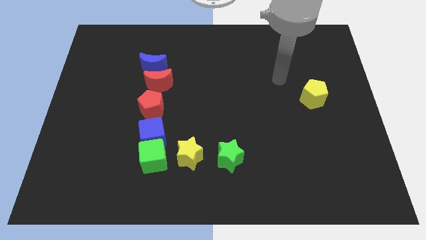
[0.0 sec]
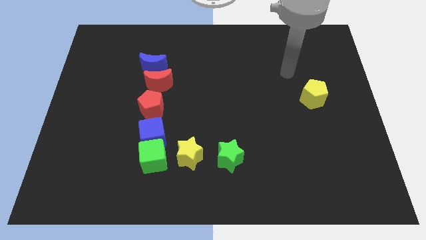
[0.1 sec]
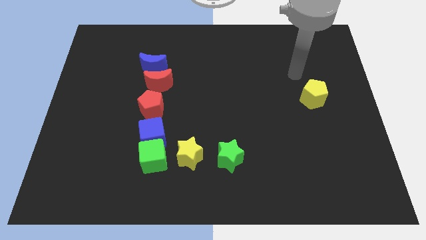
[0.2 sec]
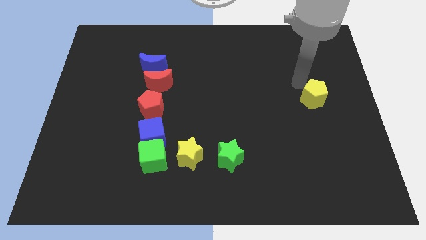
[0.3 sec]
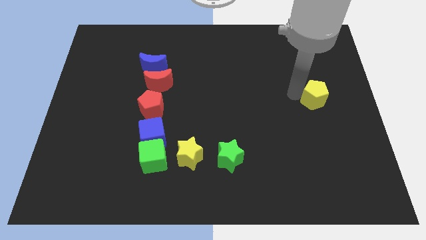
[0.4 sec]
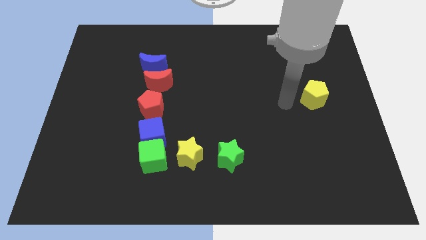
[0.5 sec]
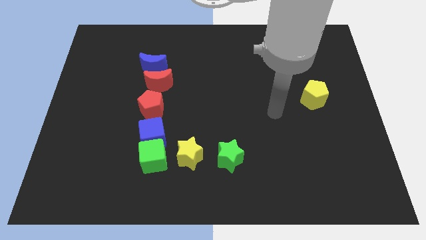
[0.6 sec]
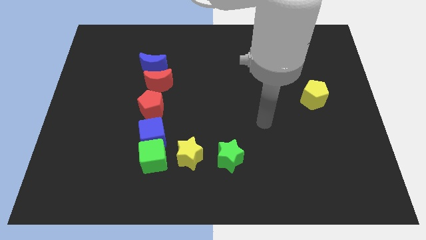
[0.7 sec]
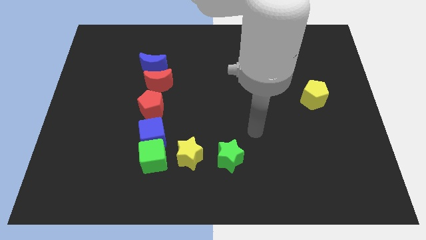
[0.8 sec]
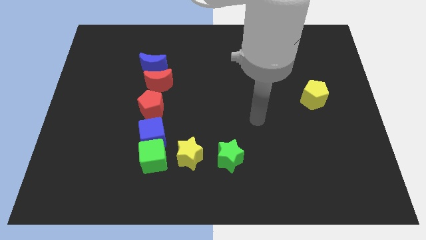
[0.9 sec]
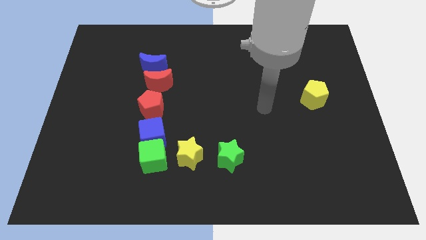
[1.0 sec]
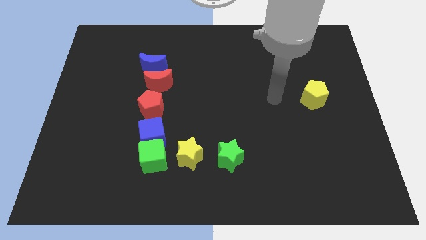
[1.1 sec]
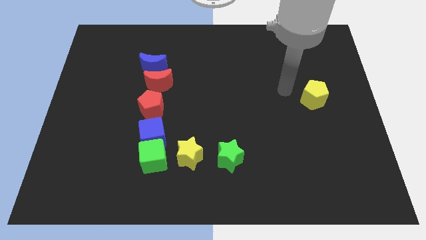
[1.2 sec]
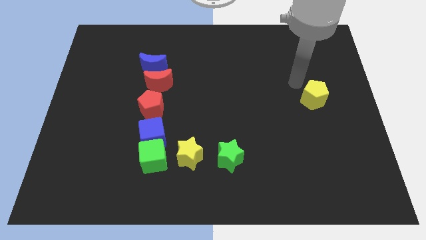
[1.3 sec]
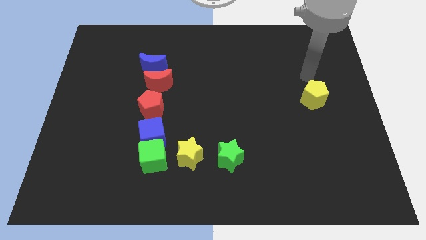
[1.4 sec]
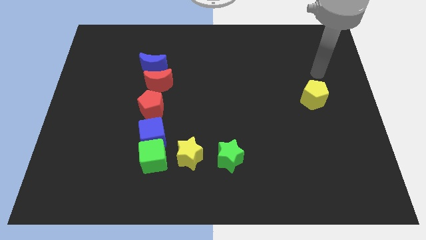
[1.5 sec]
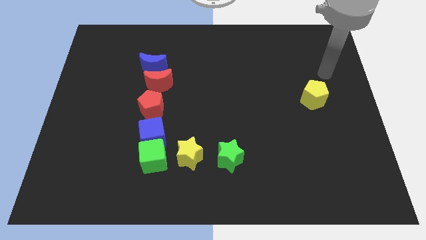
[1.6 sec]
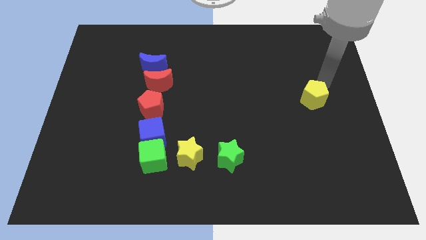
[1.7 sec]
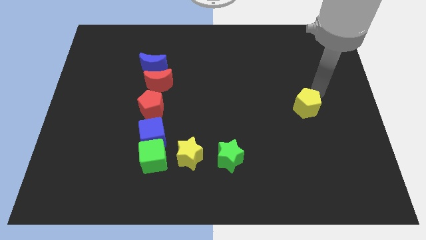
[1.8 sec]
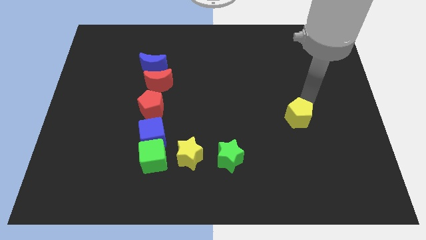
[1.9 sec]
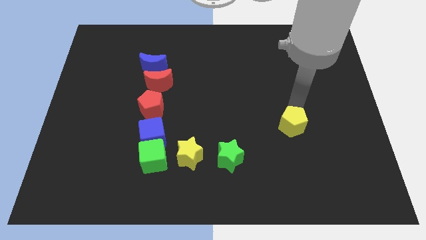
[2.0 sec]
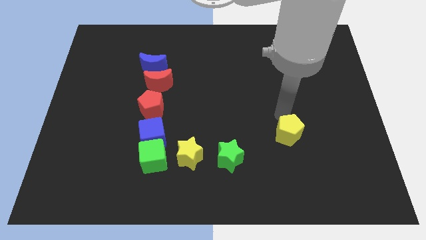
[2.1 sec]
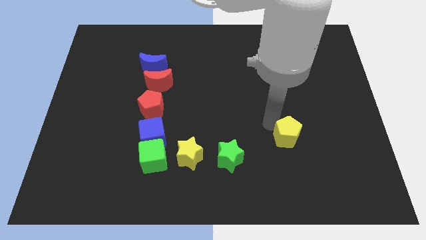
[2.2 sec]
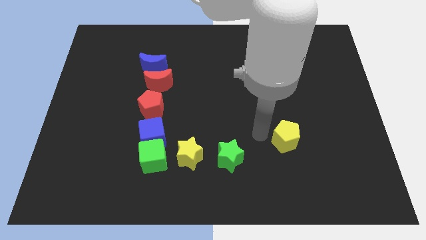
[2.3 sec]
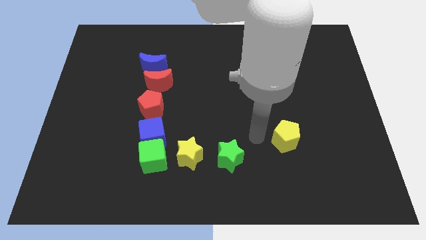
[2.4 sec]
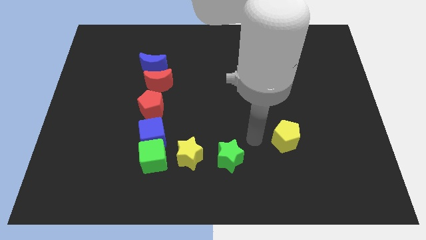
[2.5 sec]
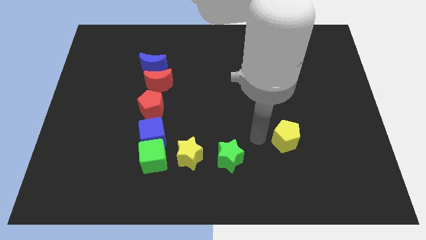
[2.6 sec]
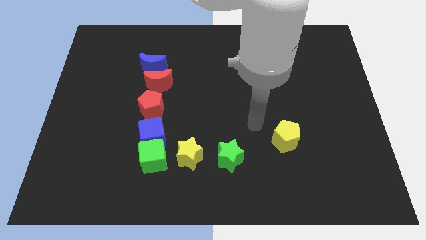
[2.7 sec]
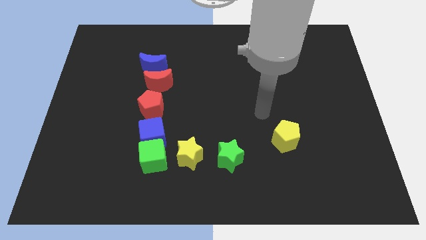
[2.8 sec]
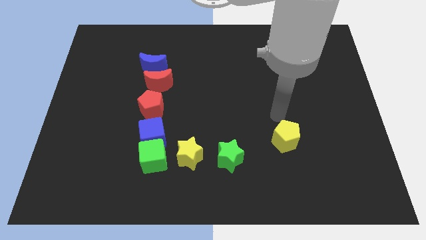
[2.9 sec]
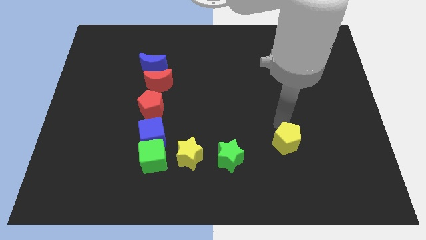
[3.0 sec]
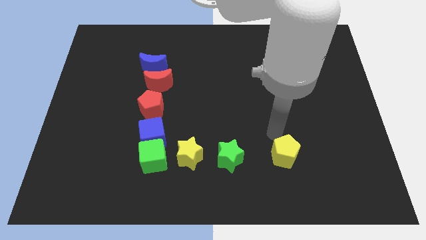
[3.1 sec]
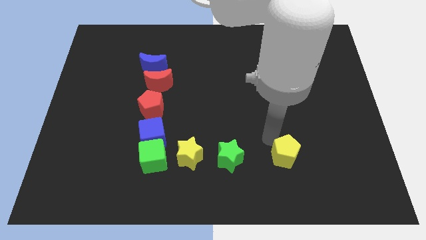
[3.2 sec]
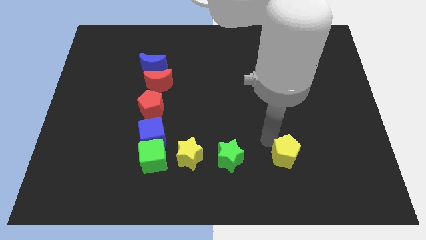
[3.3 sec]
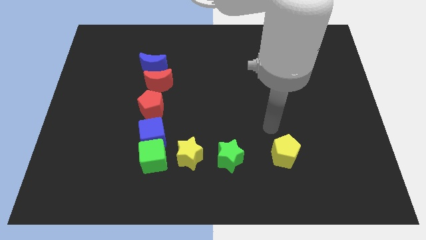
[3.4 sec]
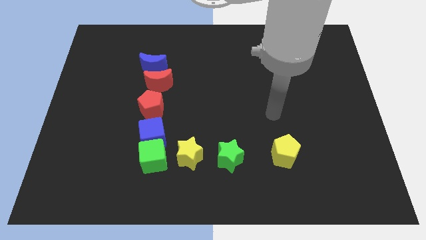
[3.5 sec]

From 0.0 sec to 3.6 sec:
move the yellow pentagon bottom center of the board

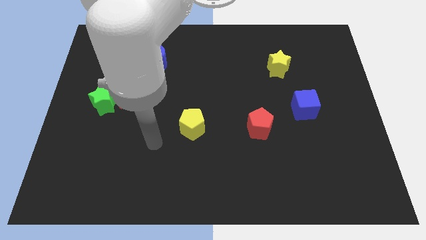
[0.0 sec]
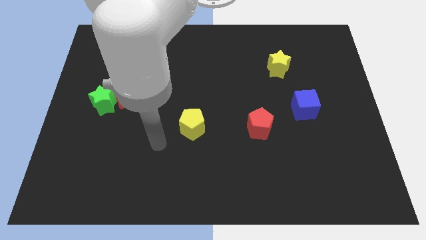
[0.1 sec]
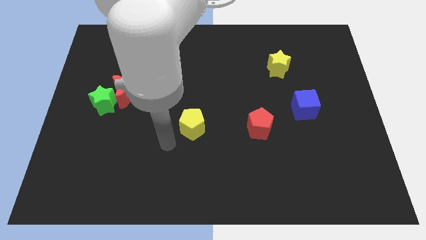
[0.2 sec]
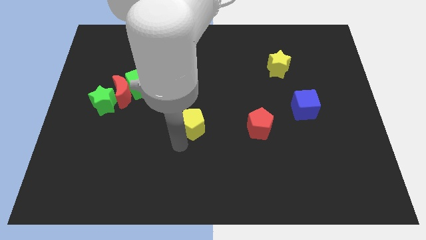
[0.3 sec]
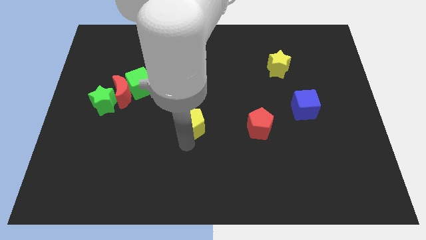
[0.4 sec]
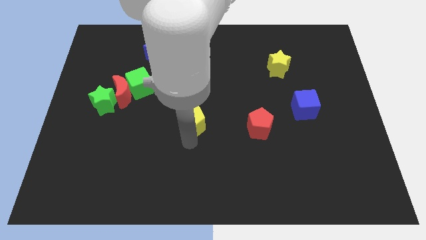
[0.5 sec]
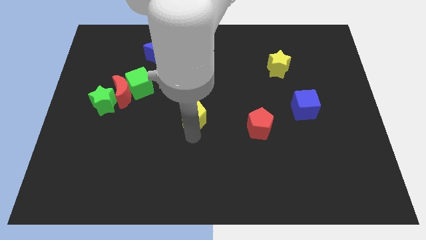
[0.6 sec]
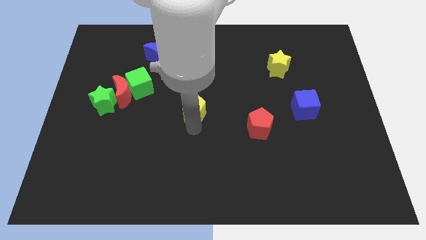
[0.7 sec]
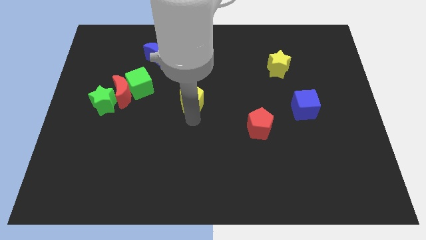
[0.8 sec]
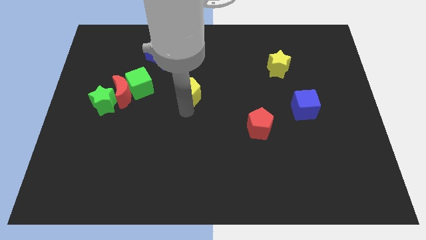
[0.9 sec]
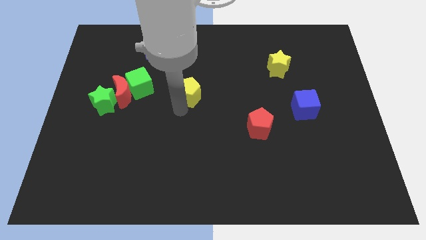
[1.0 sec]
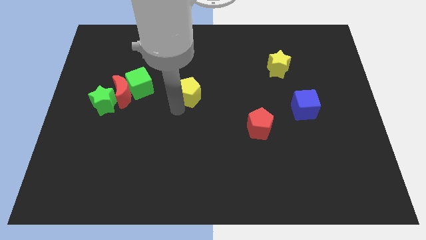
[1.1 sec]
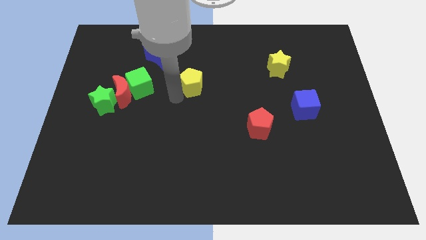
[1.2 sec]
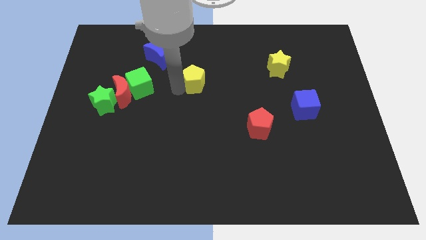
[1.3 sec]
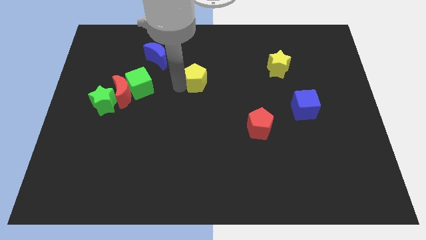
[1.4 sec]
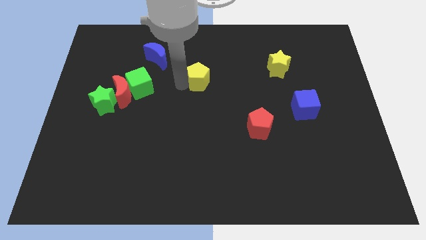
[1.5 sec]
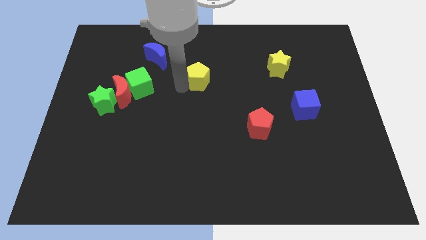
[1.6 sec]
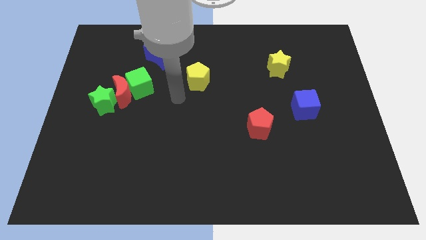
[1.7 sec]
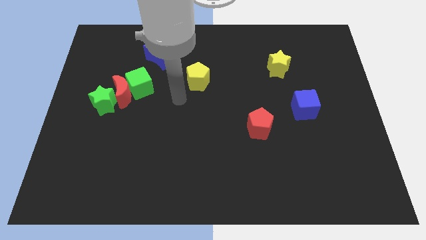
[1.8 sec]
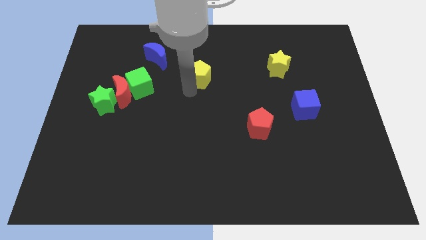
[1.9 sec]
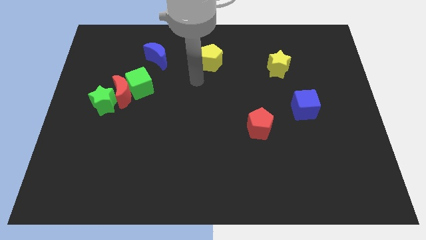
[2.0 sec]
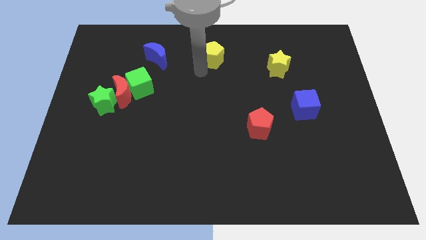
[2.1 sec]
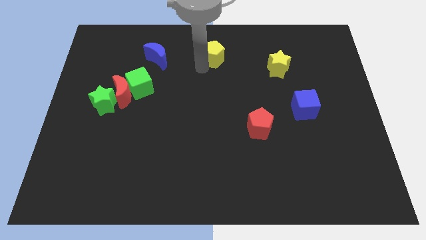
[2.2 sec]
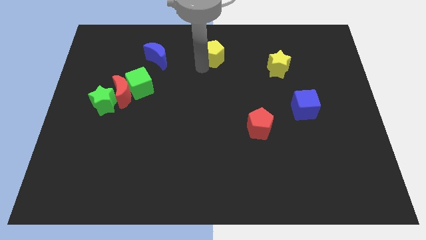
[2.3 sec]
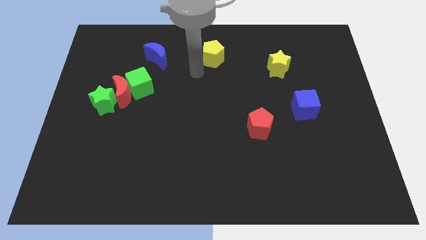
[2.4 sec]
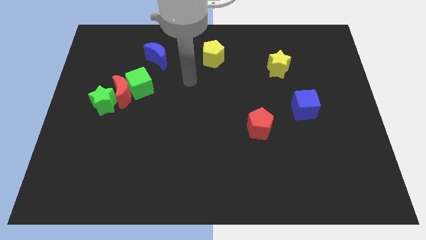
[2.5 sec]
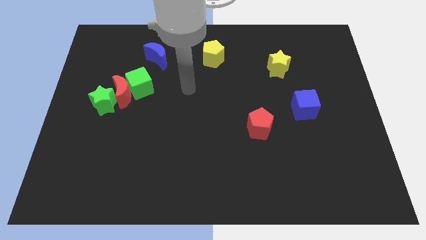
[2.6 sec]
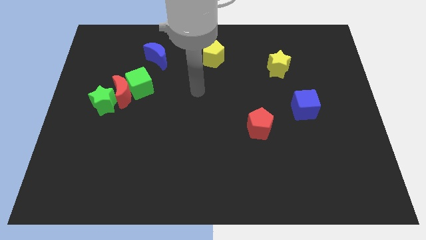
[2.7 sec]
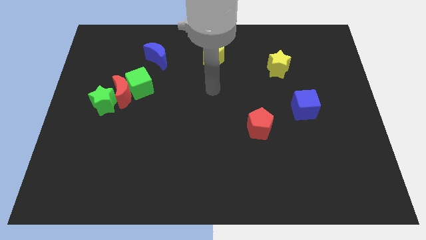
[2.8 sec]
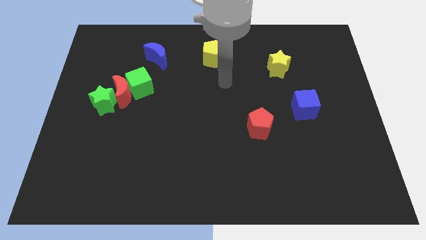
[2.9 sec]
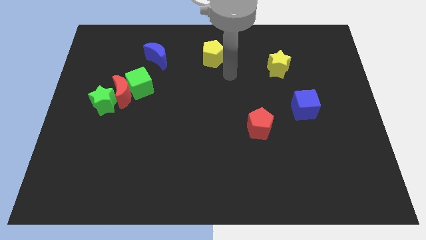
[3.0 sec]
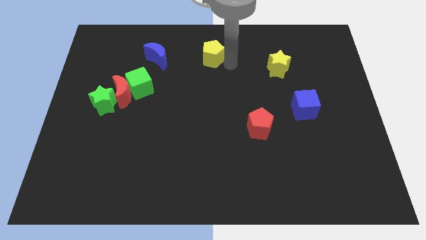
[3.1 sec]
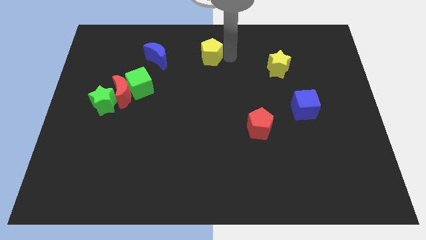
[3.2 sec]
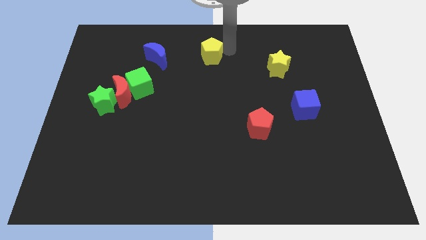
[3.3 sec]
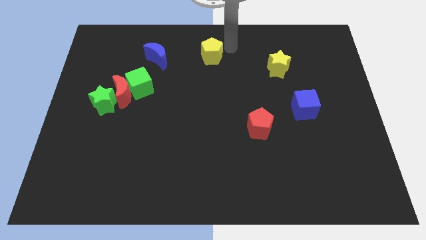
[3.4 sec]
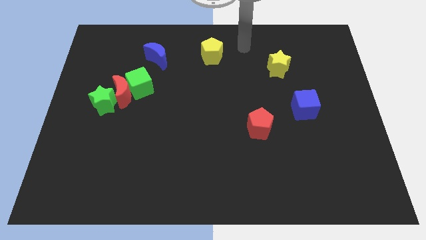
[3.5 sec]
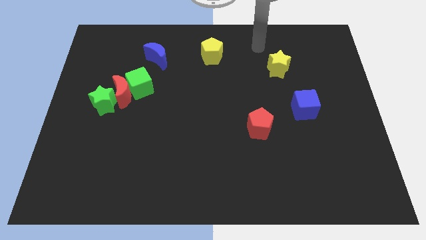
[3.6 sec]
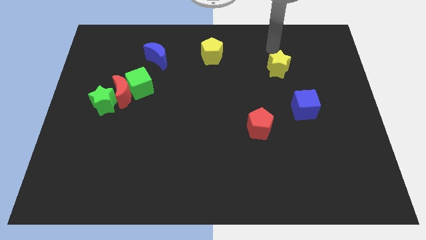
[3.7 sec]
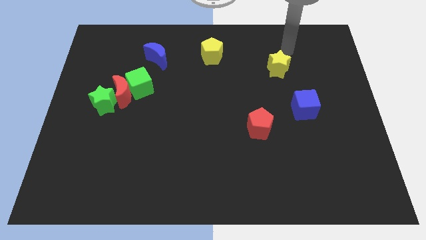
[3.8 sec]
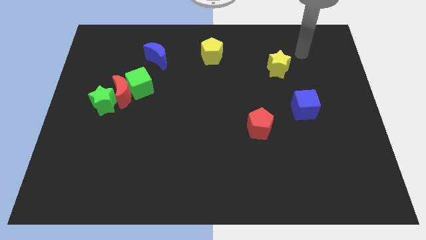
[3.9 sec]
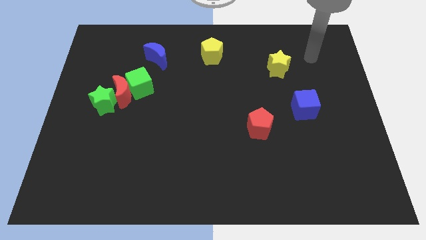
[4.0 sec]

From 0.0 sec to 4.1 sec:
move the yellow pentagon to the top centre of the board

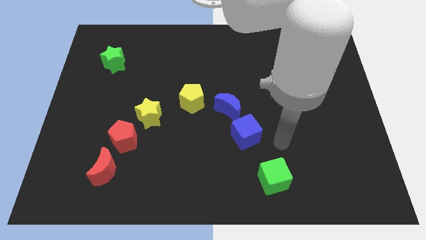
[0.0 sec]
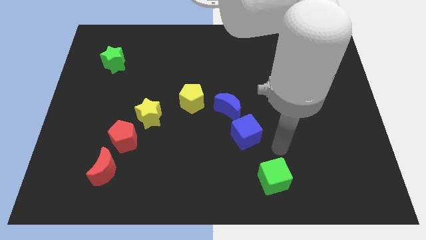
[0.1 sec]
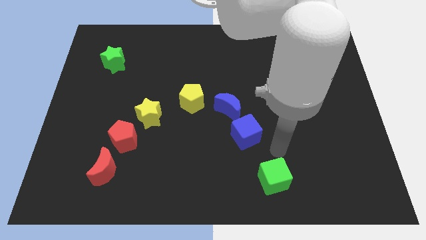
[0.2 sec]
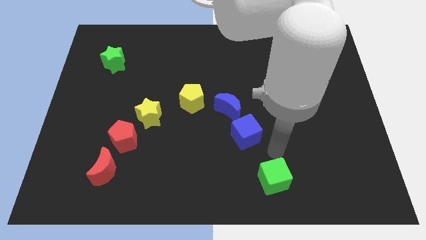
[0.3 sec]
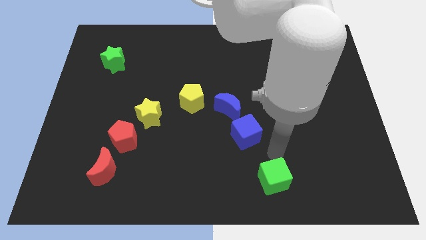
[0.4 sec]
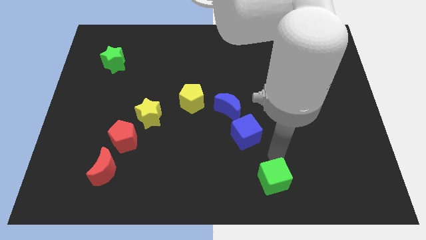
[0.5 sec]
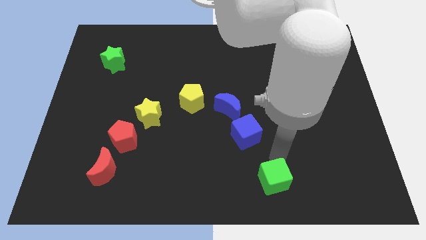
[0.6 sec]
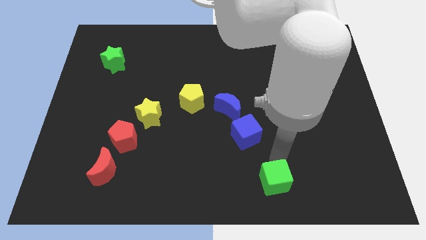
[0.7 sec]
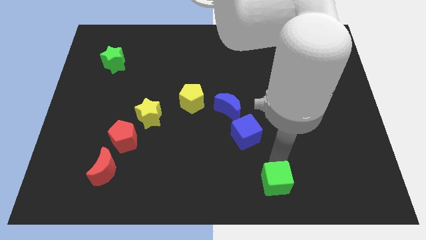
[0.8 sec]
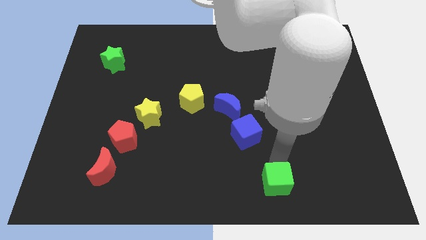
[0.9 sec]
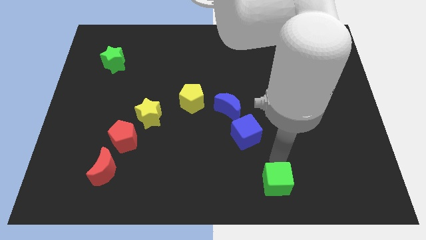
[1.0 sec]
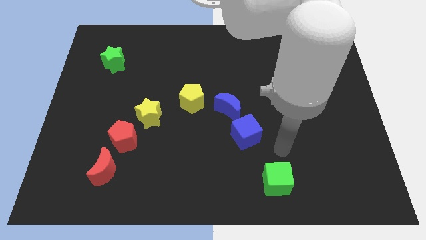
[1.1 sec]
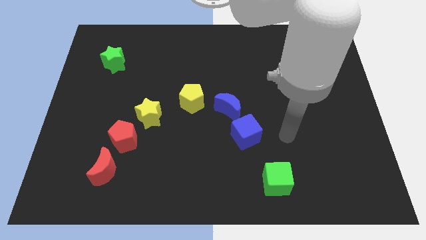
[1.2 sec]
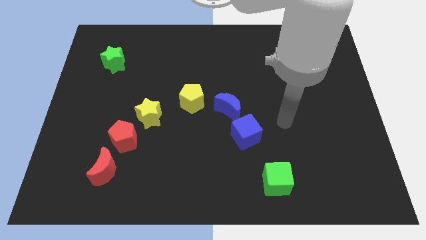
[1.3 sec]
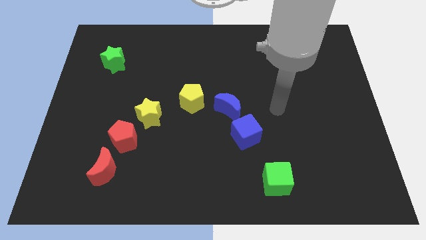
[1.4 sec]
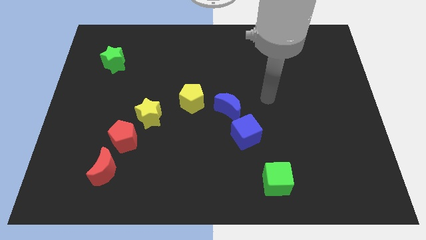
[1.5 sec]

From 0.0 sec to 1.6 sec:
slightly move the top side of the green cube
